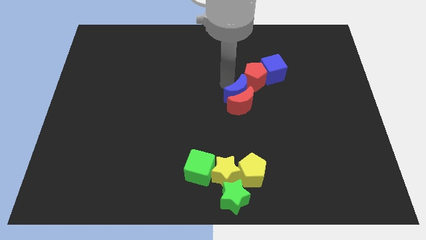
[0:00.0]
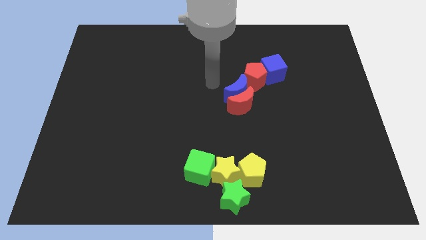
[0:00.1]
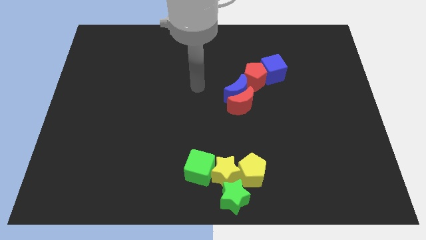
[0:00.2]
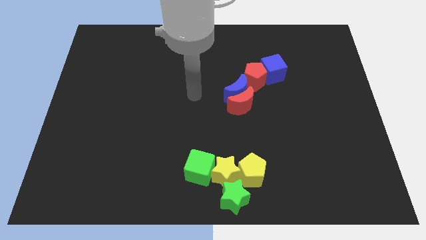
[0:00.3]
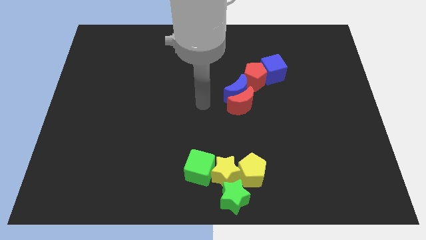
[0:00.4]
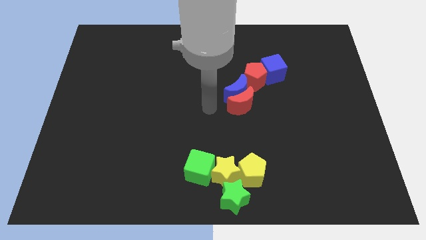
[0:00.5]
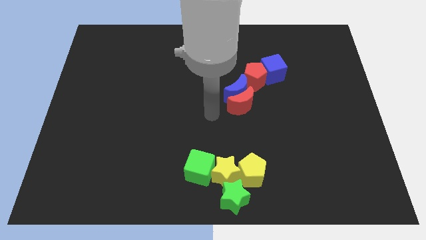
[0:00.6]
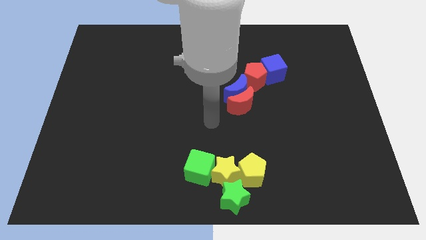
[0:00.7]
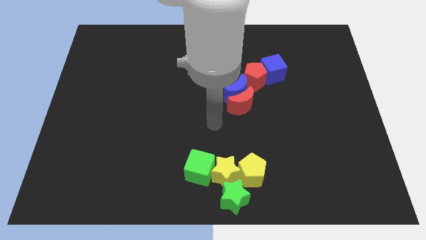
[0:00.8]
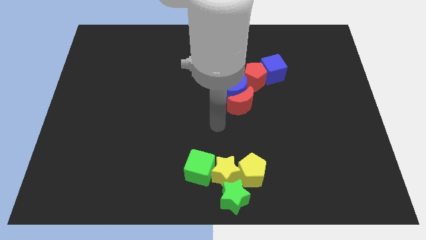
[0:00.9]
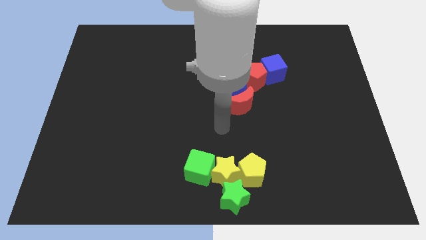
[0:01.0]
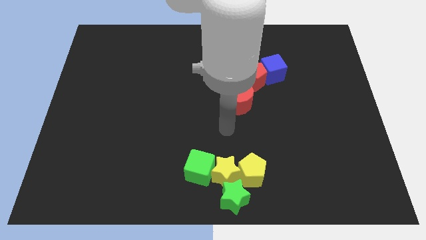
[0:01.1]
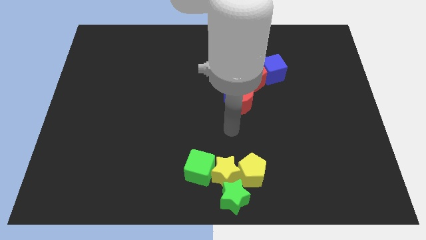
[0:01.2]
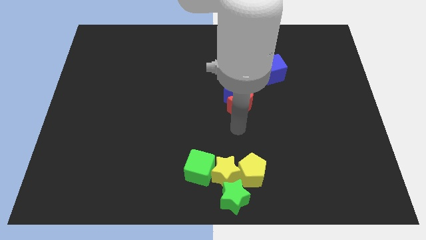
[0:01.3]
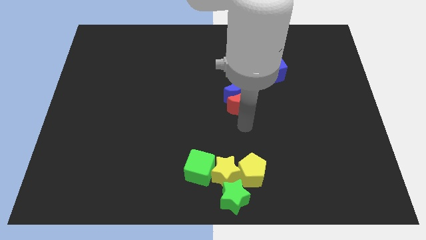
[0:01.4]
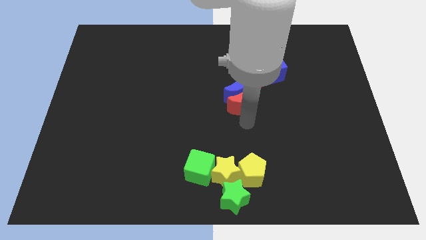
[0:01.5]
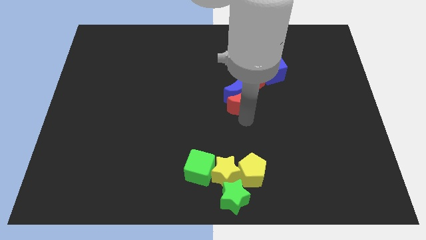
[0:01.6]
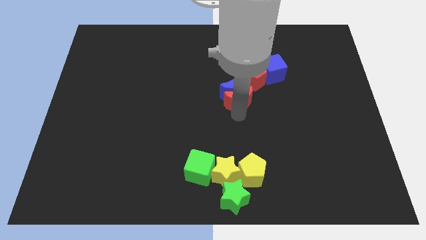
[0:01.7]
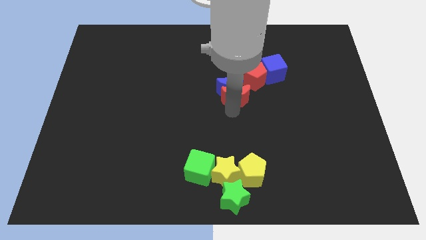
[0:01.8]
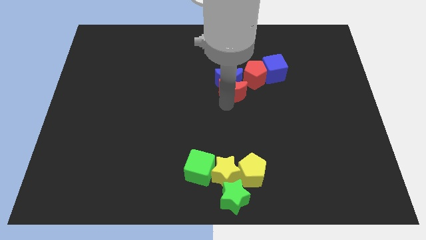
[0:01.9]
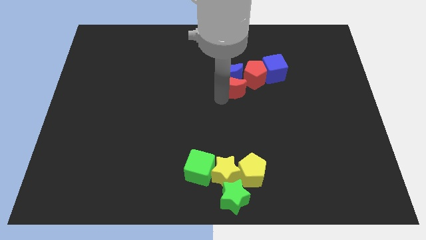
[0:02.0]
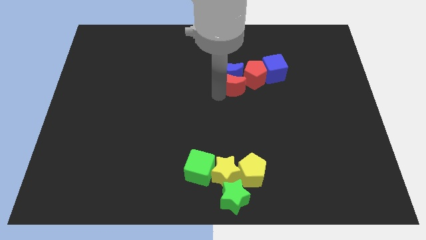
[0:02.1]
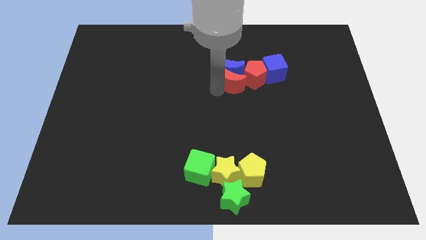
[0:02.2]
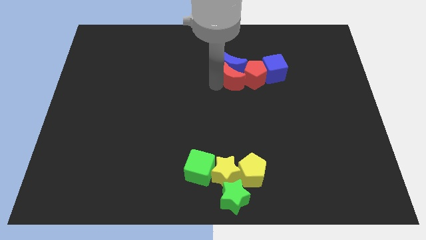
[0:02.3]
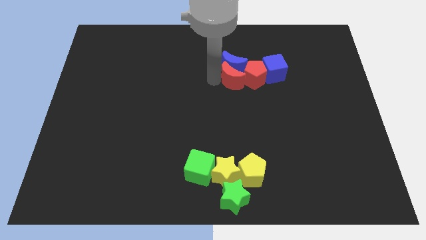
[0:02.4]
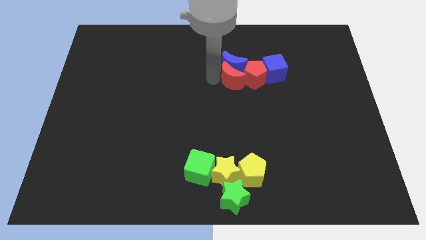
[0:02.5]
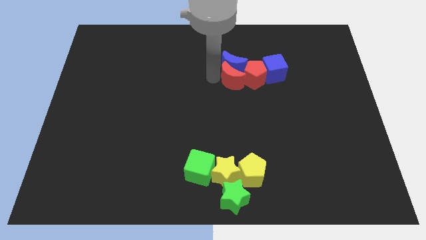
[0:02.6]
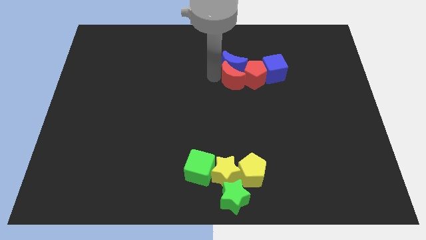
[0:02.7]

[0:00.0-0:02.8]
point your arm below the red moon

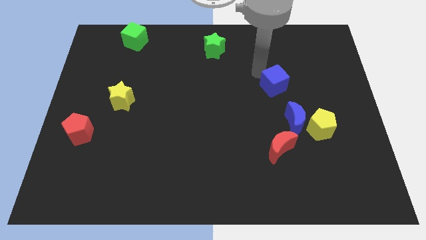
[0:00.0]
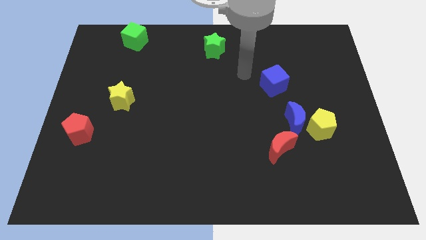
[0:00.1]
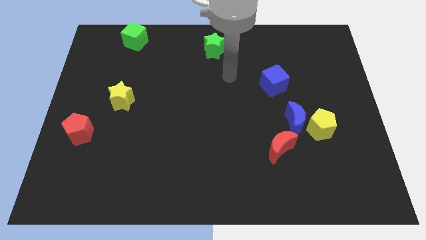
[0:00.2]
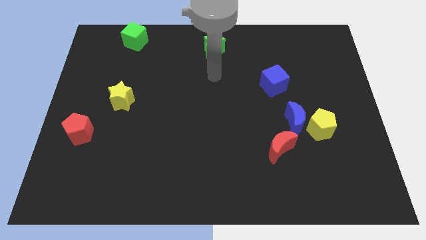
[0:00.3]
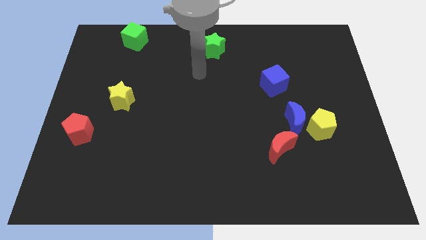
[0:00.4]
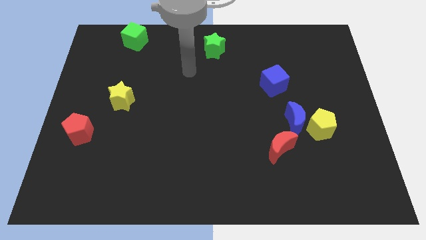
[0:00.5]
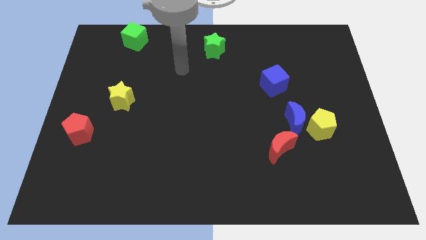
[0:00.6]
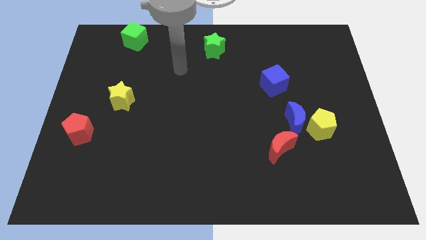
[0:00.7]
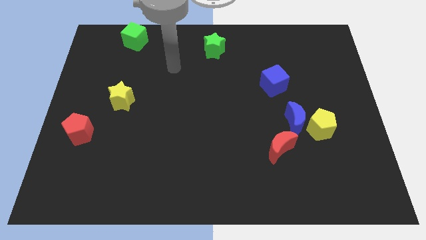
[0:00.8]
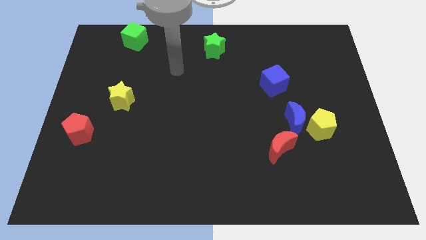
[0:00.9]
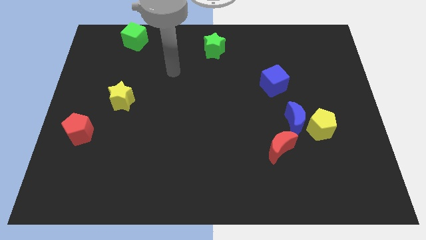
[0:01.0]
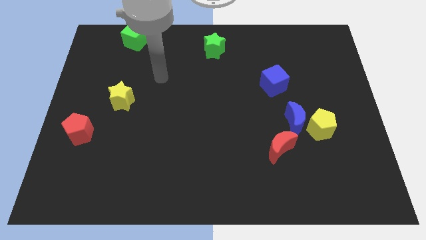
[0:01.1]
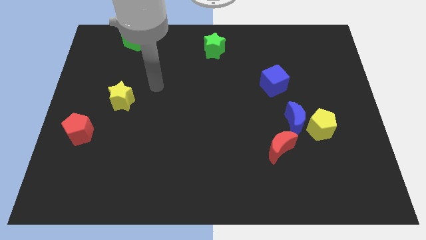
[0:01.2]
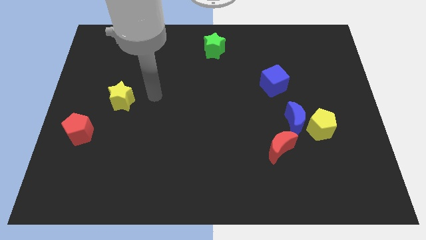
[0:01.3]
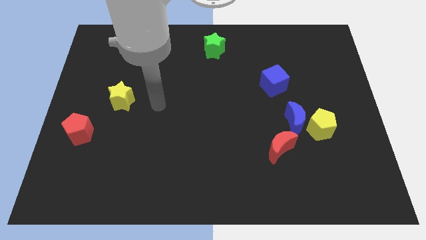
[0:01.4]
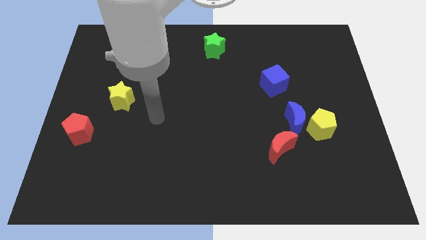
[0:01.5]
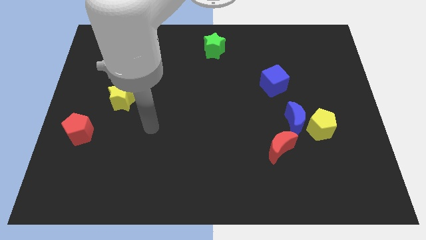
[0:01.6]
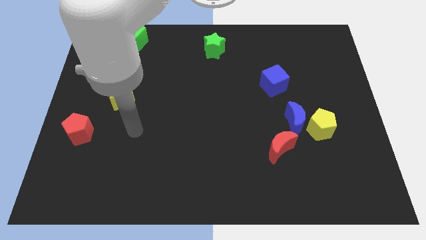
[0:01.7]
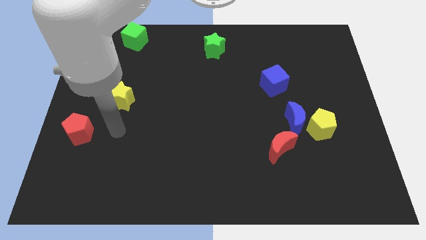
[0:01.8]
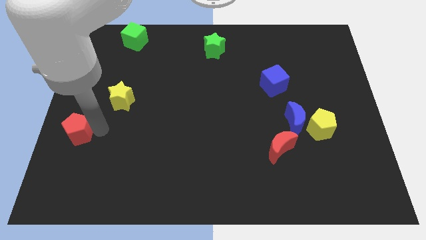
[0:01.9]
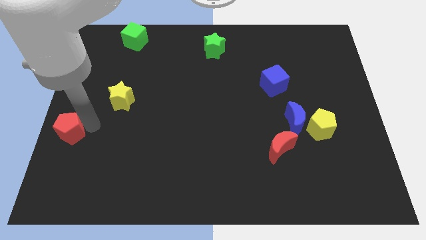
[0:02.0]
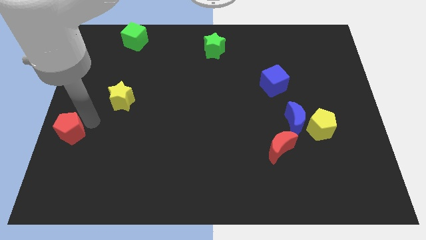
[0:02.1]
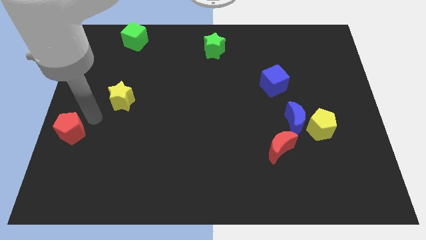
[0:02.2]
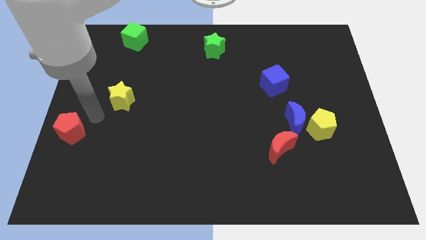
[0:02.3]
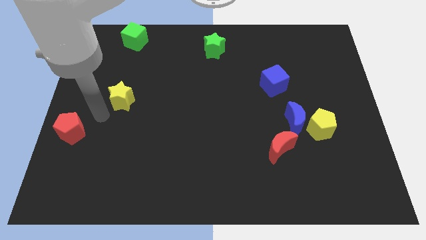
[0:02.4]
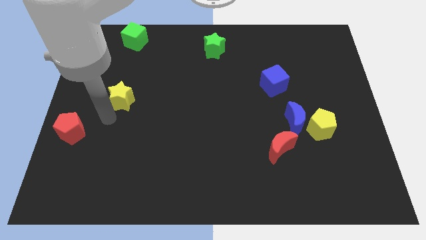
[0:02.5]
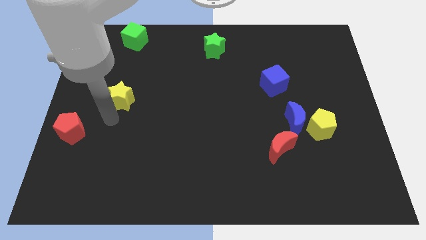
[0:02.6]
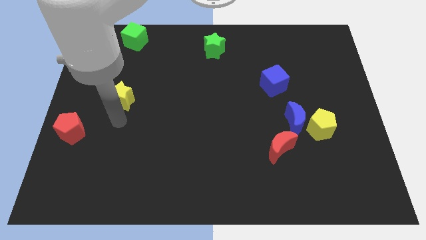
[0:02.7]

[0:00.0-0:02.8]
move the red pentagon to the left center of the board

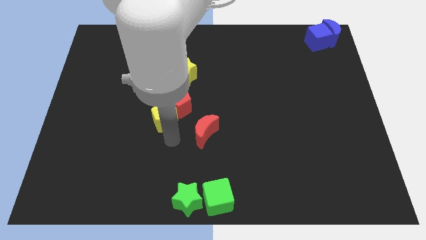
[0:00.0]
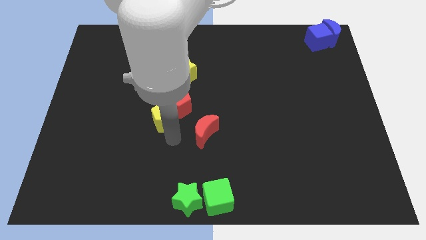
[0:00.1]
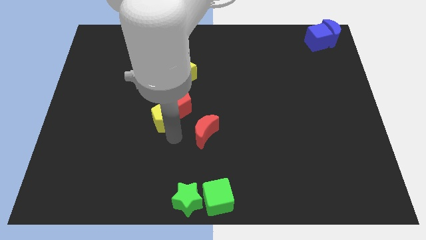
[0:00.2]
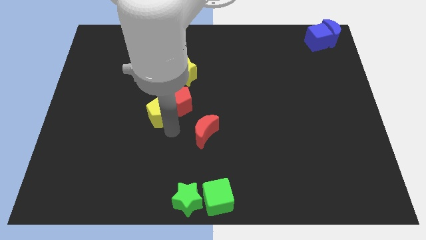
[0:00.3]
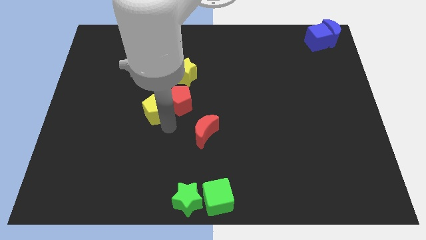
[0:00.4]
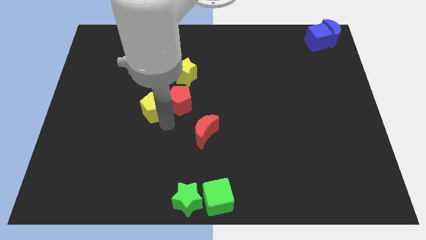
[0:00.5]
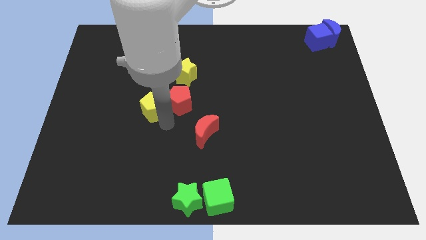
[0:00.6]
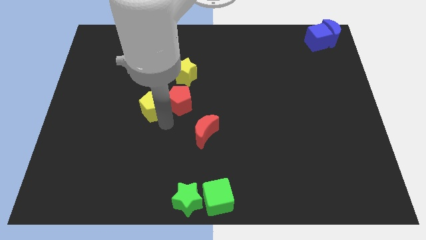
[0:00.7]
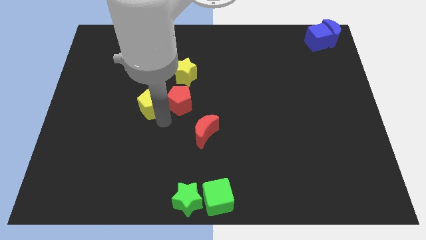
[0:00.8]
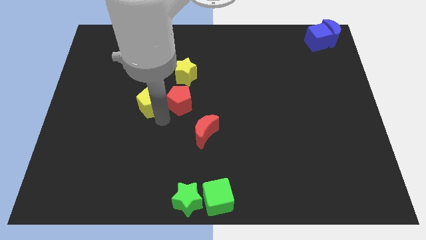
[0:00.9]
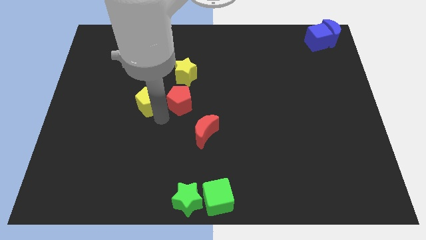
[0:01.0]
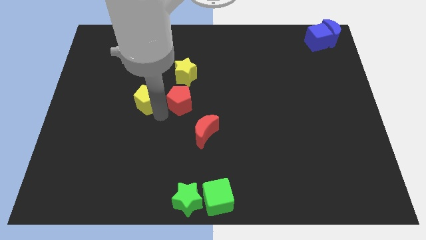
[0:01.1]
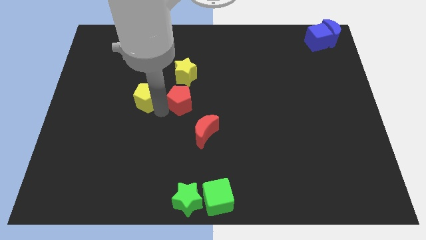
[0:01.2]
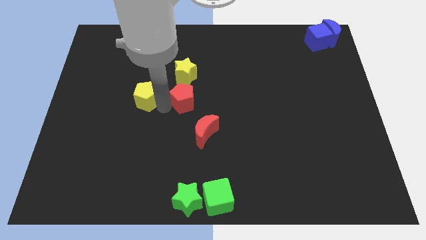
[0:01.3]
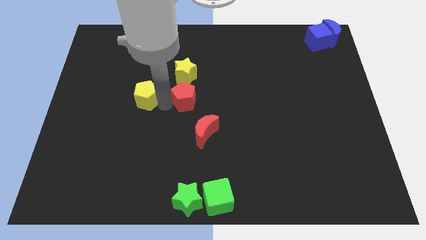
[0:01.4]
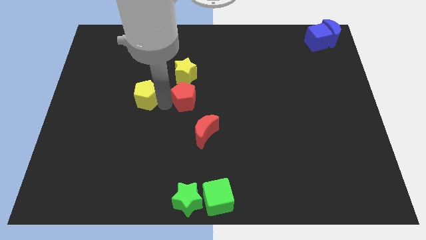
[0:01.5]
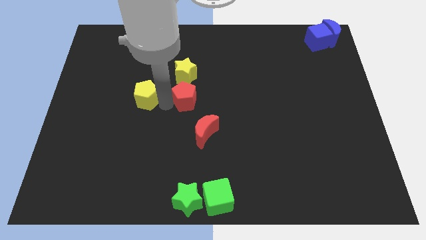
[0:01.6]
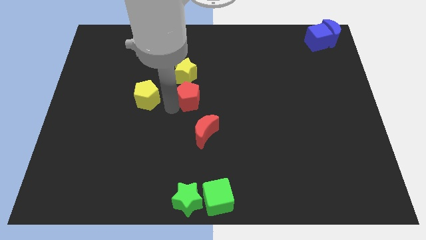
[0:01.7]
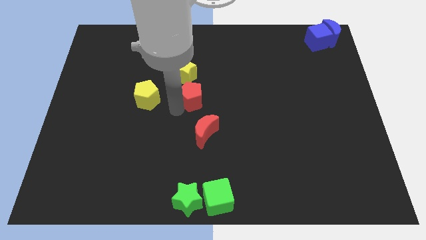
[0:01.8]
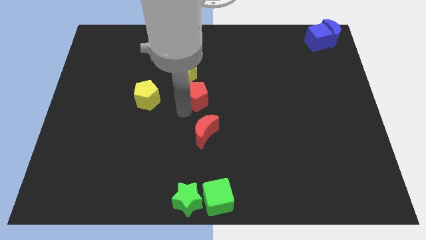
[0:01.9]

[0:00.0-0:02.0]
separate yellow pentagon away from red pentagon

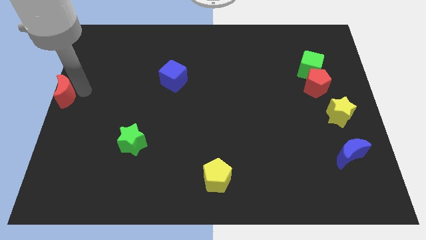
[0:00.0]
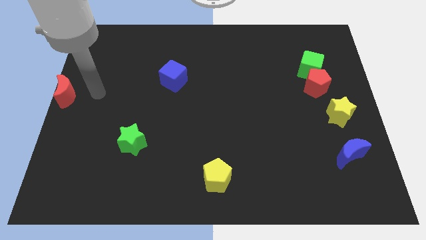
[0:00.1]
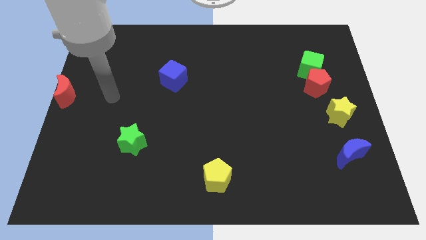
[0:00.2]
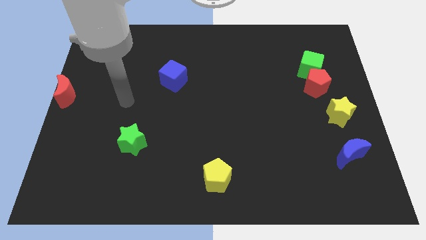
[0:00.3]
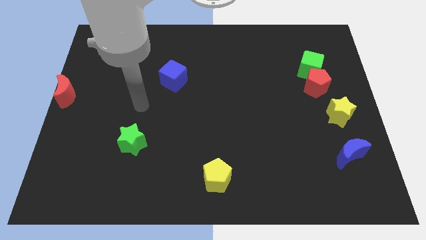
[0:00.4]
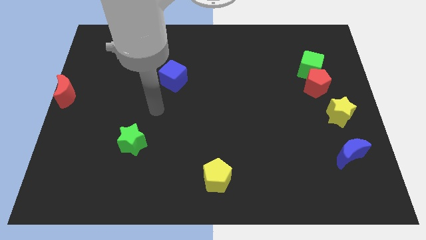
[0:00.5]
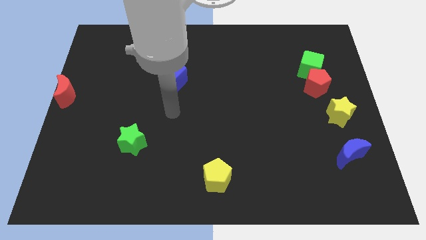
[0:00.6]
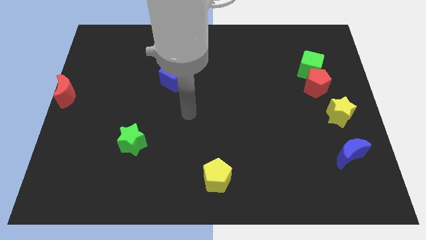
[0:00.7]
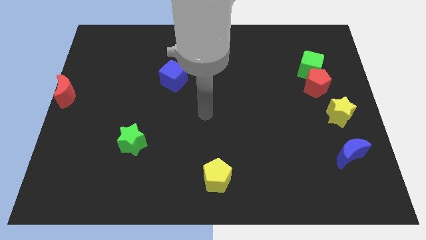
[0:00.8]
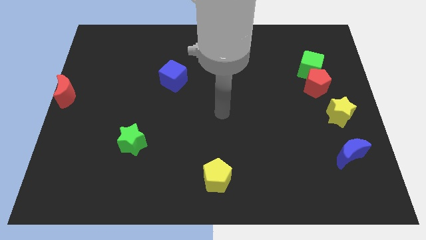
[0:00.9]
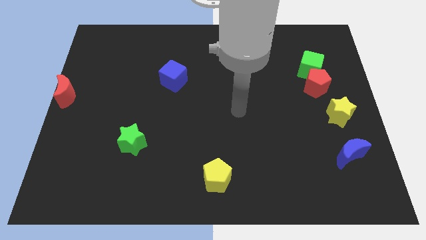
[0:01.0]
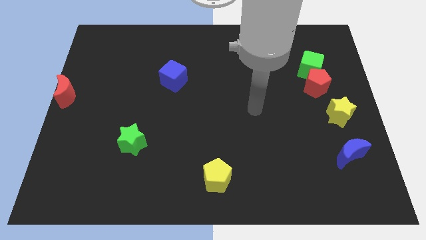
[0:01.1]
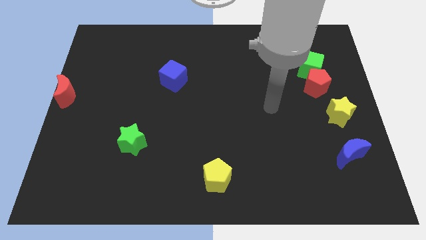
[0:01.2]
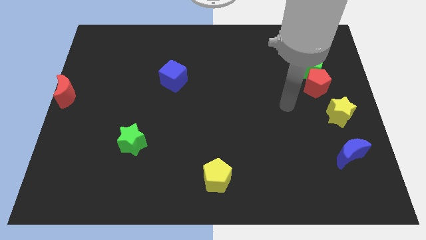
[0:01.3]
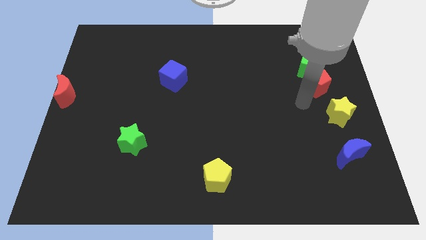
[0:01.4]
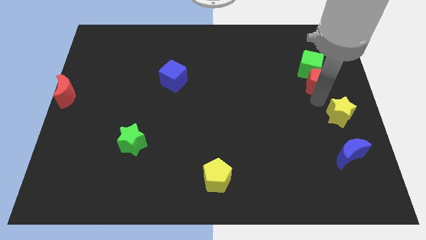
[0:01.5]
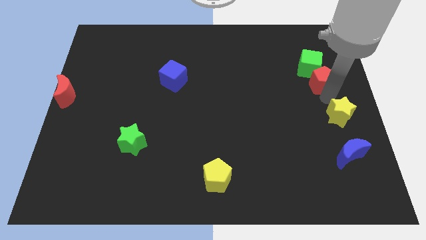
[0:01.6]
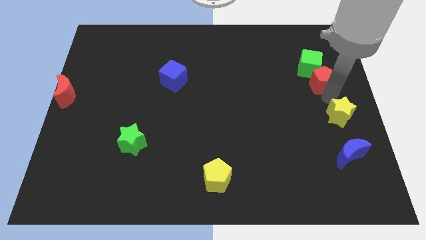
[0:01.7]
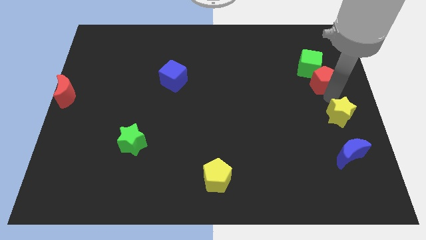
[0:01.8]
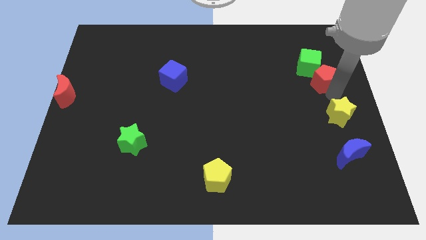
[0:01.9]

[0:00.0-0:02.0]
move the arm towards the bottom side of the red pentagon
